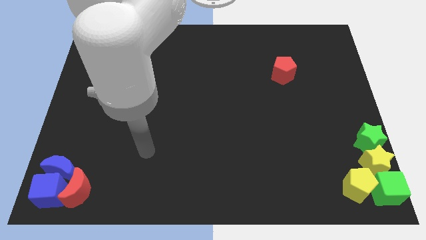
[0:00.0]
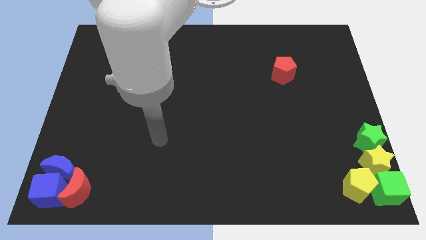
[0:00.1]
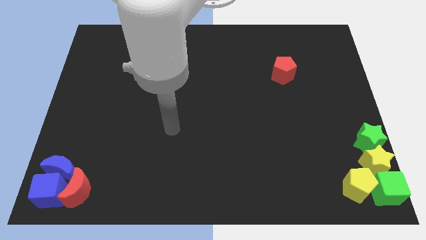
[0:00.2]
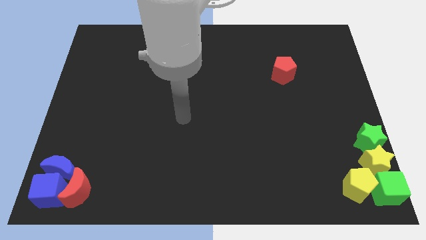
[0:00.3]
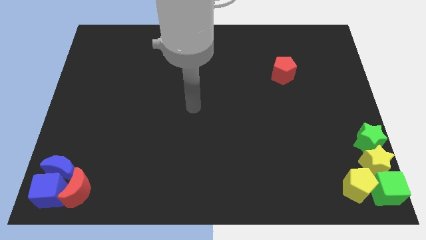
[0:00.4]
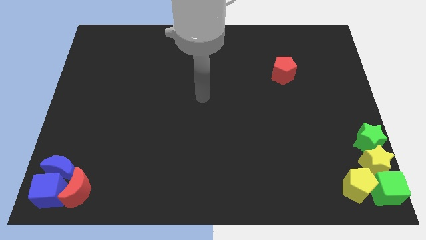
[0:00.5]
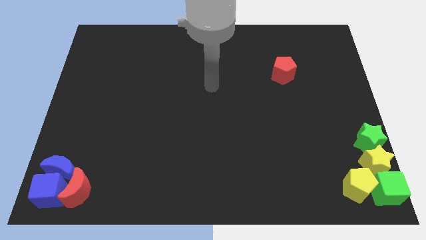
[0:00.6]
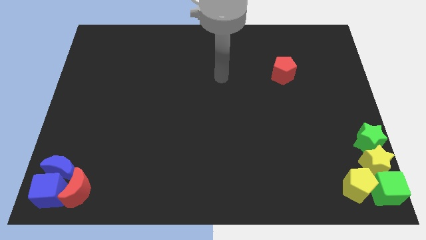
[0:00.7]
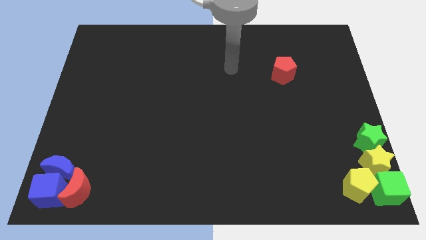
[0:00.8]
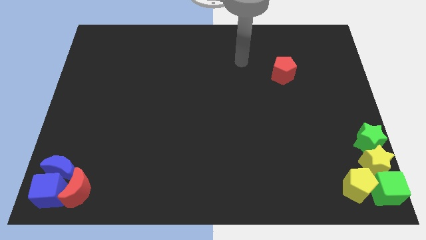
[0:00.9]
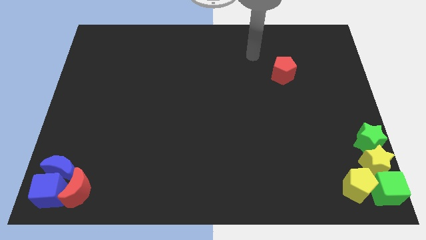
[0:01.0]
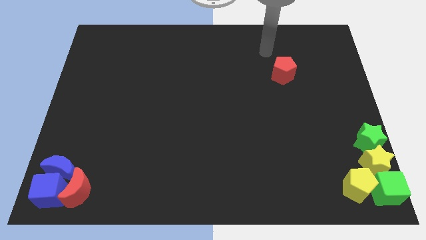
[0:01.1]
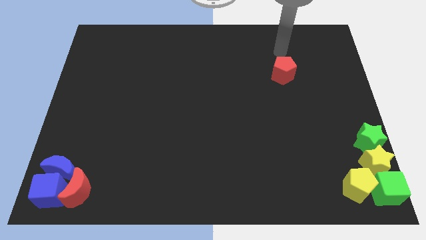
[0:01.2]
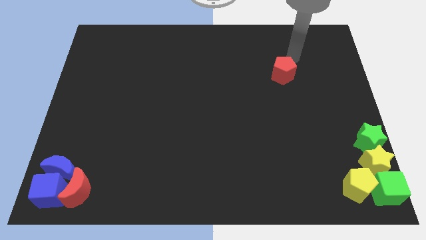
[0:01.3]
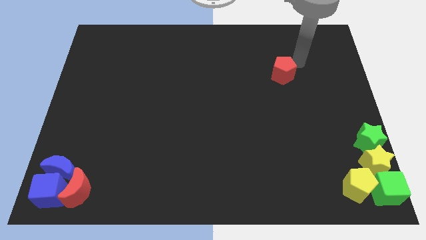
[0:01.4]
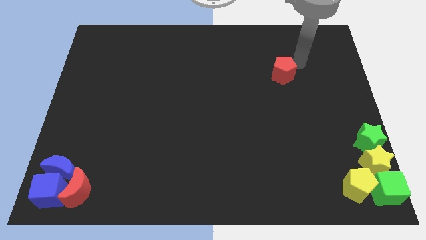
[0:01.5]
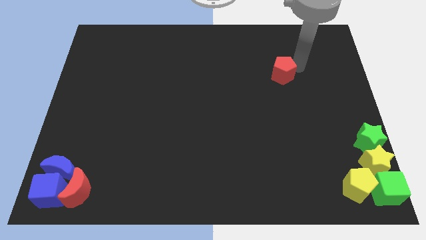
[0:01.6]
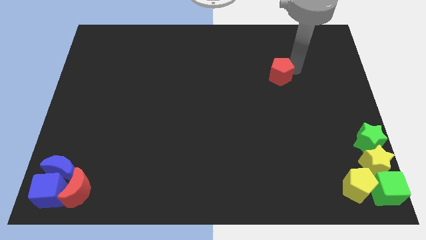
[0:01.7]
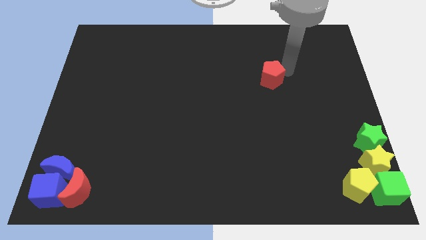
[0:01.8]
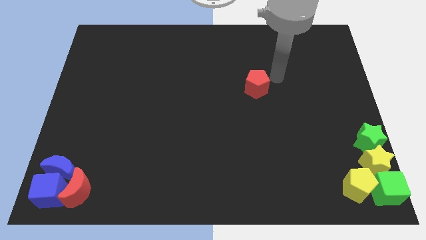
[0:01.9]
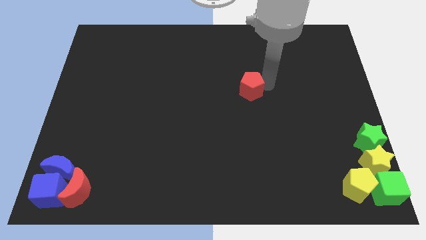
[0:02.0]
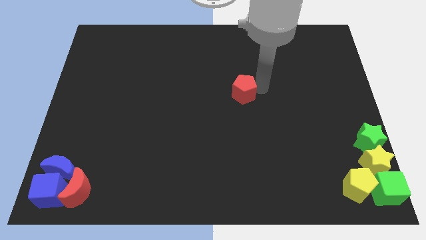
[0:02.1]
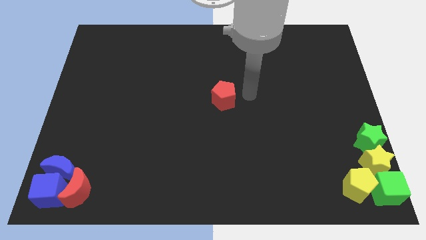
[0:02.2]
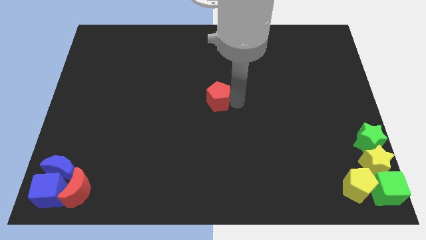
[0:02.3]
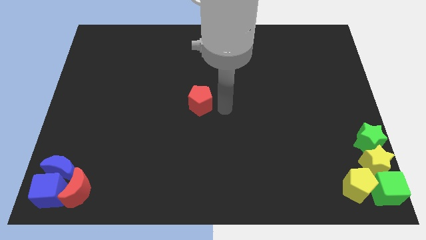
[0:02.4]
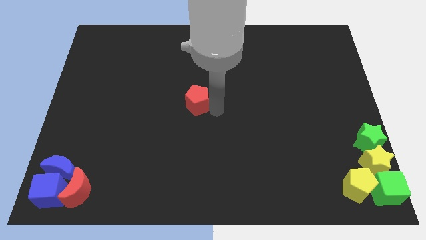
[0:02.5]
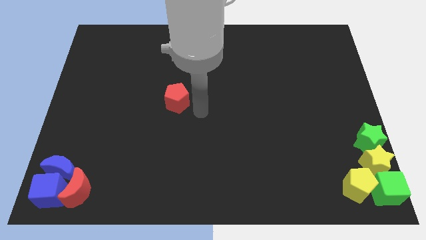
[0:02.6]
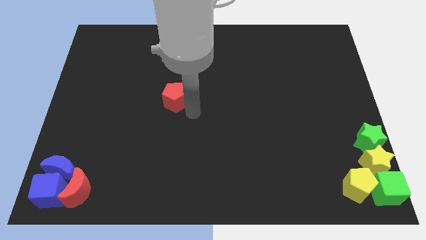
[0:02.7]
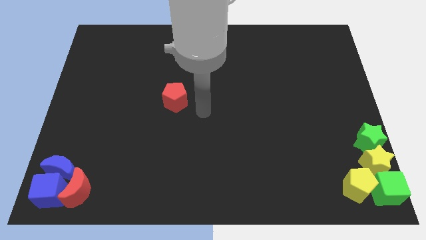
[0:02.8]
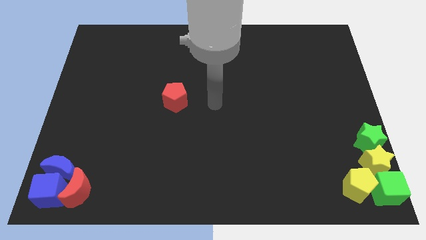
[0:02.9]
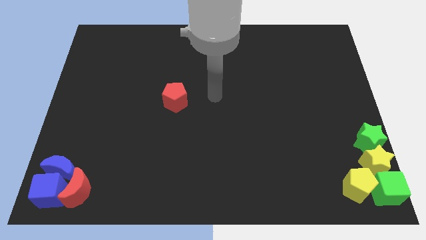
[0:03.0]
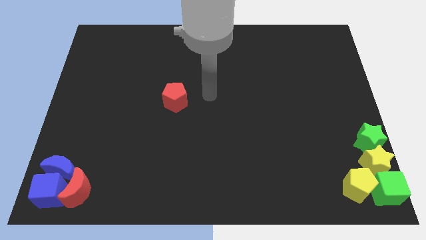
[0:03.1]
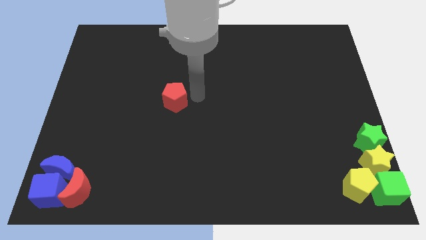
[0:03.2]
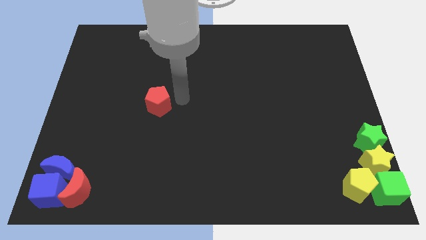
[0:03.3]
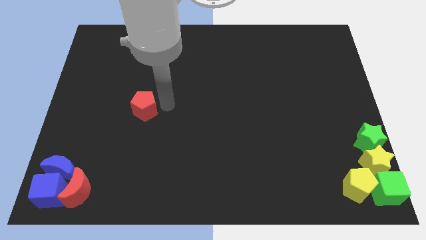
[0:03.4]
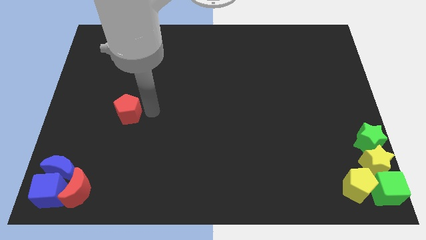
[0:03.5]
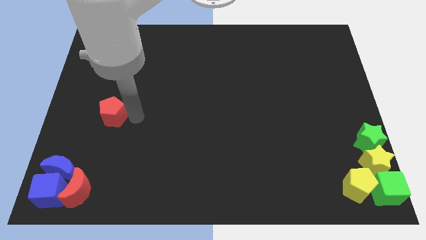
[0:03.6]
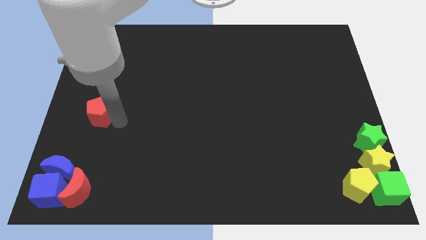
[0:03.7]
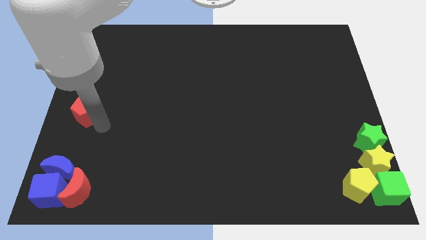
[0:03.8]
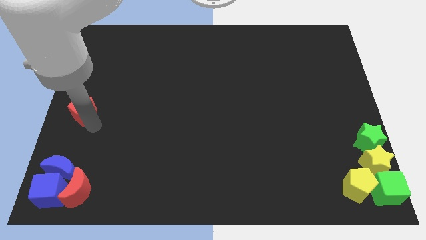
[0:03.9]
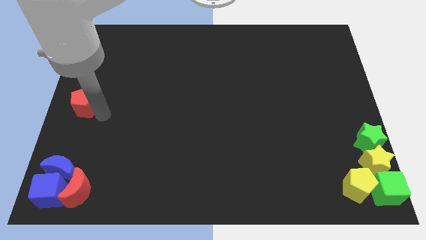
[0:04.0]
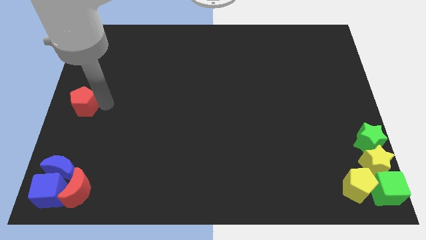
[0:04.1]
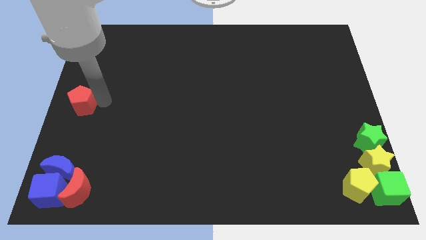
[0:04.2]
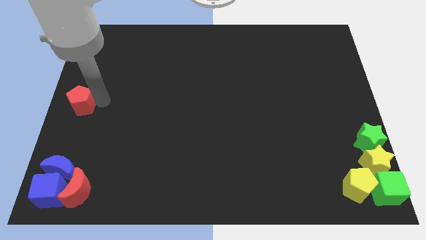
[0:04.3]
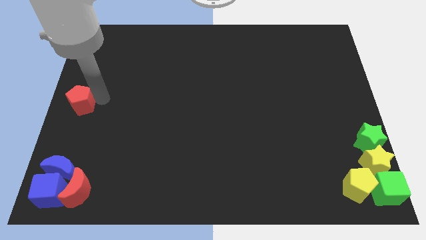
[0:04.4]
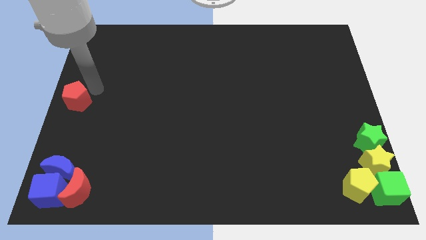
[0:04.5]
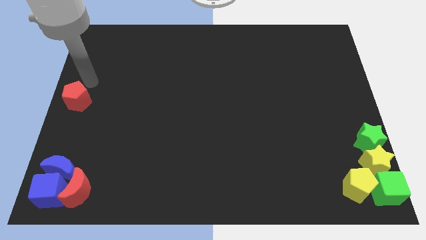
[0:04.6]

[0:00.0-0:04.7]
place the red pentagon vertically above the blue crescent

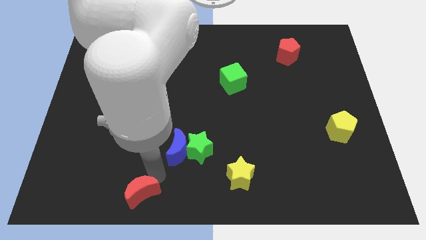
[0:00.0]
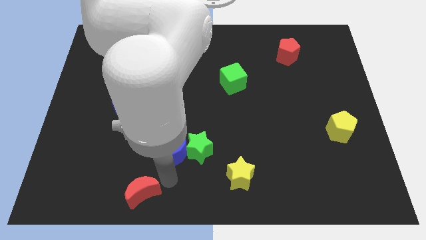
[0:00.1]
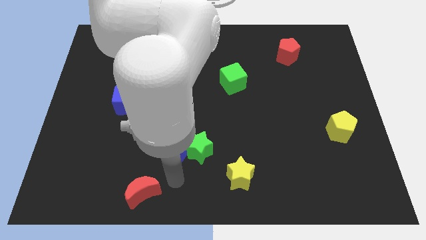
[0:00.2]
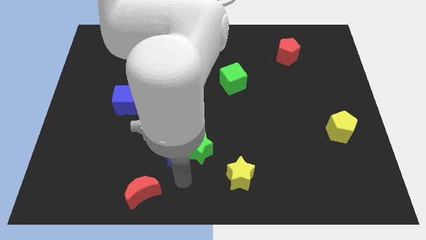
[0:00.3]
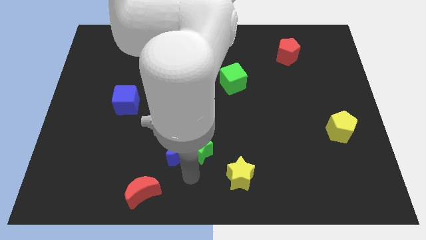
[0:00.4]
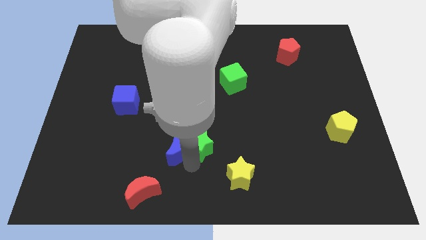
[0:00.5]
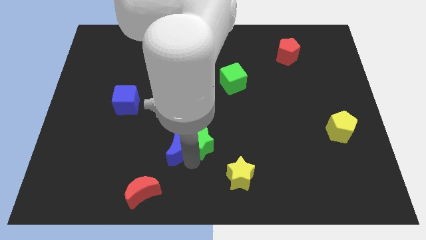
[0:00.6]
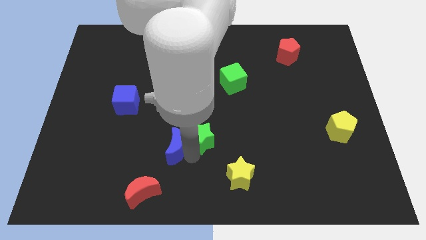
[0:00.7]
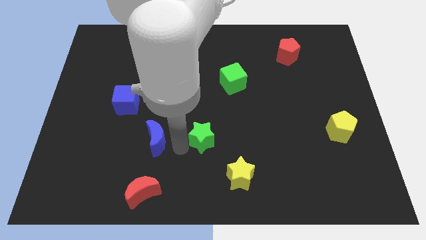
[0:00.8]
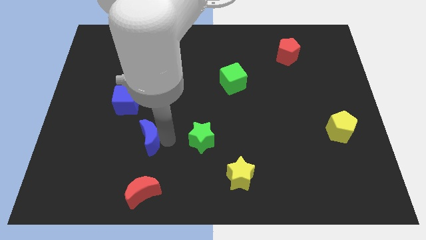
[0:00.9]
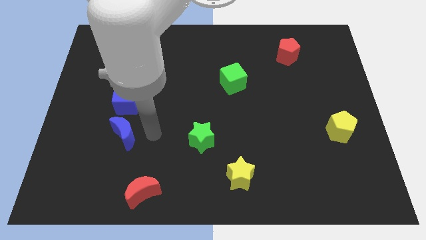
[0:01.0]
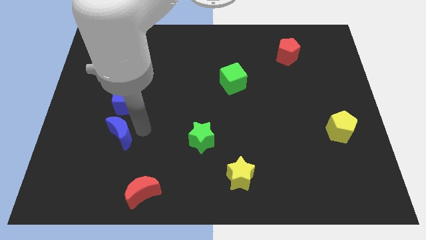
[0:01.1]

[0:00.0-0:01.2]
separate blue moon from green star

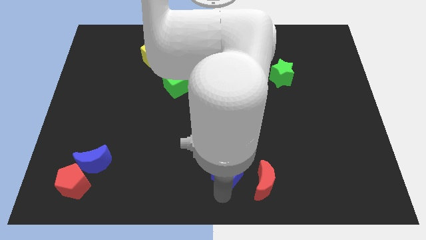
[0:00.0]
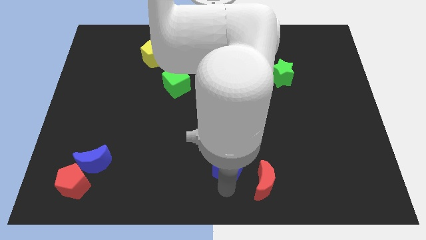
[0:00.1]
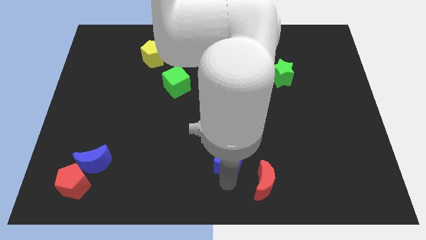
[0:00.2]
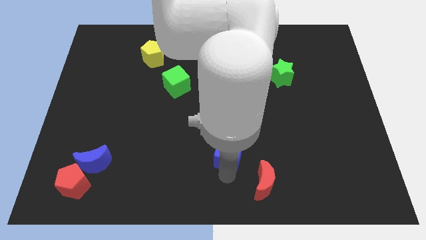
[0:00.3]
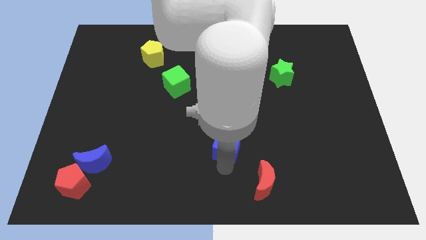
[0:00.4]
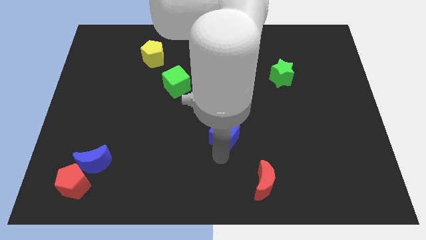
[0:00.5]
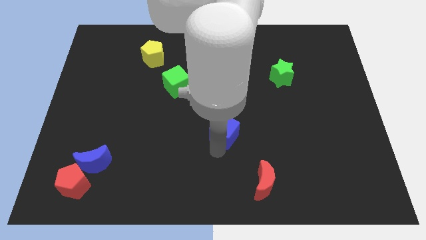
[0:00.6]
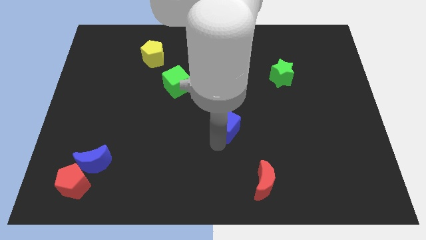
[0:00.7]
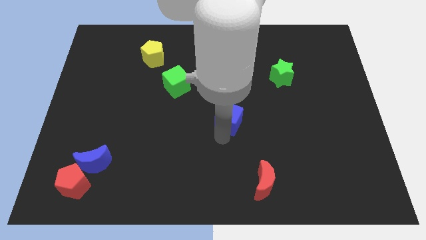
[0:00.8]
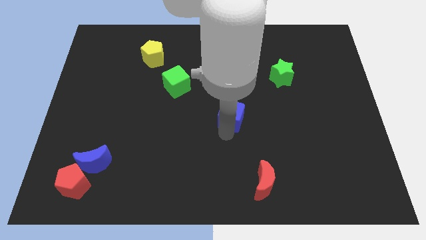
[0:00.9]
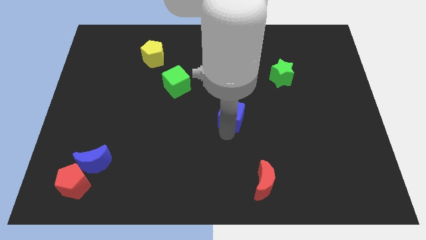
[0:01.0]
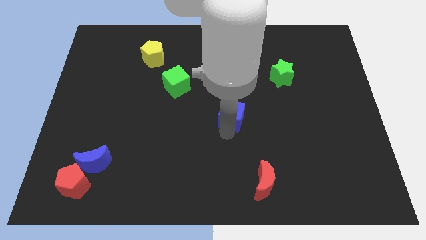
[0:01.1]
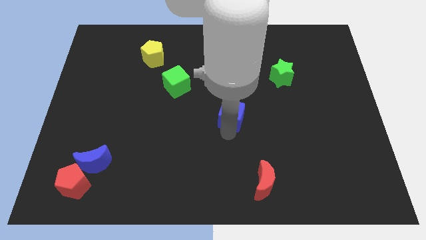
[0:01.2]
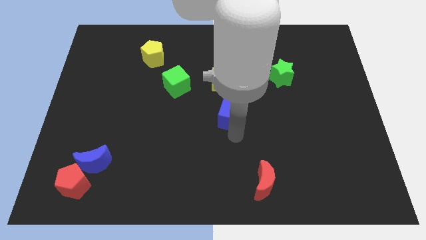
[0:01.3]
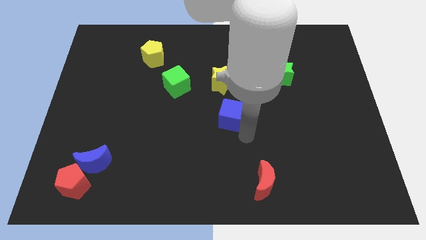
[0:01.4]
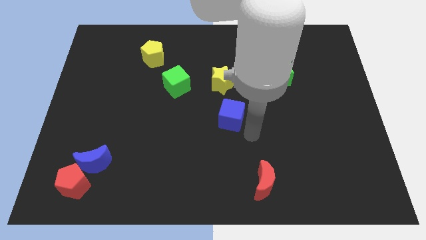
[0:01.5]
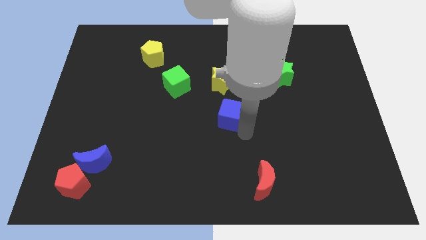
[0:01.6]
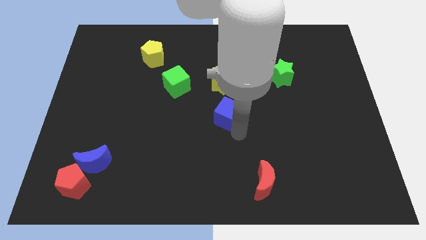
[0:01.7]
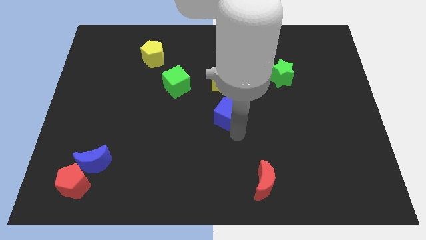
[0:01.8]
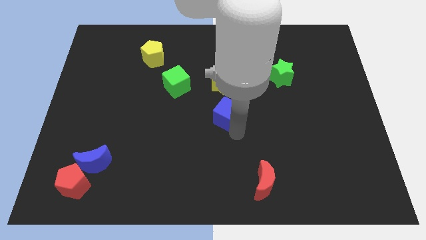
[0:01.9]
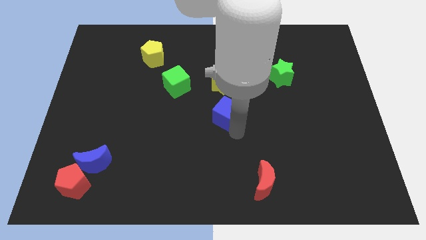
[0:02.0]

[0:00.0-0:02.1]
slide the blue cube towards the center of the board

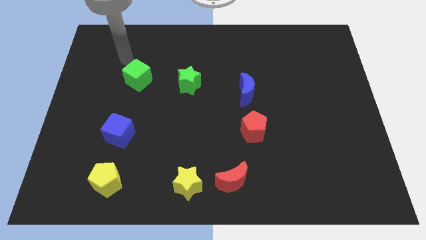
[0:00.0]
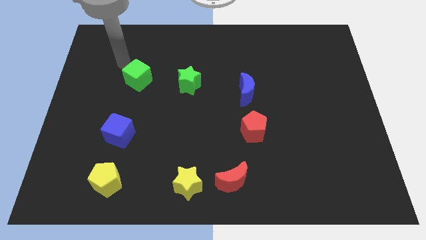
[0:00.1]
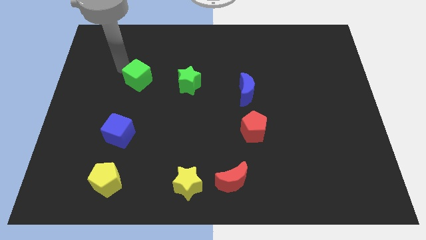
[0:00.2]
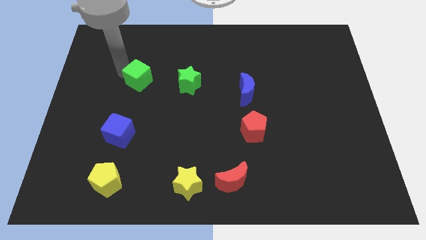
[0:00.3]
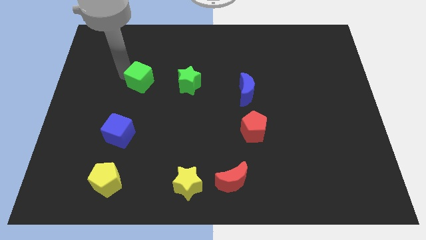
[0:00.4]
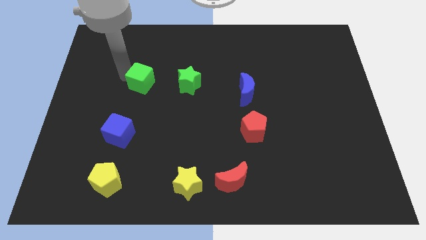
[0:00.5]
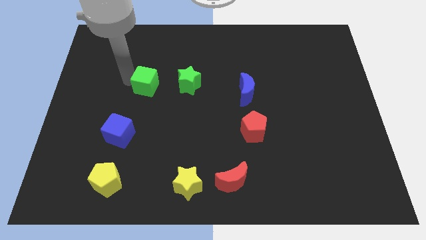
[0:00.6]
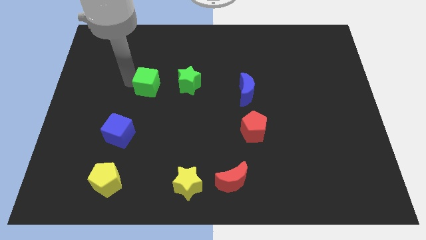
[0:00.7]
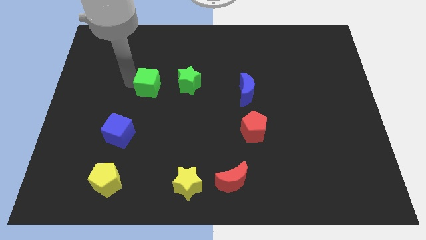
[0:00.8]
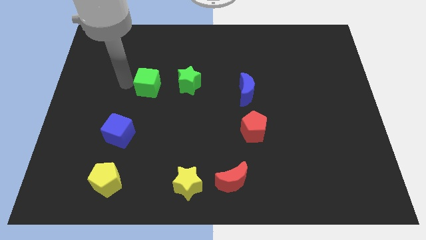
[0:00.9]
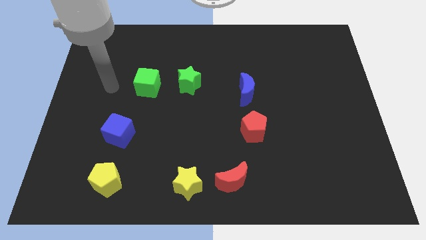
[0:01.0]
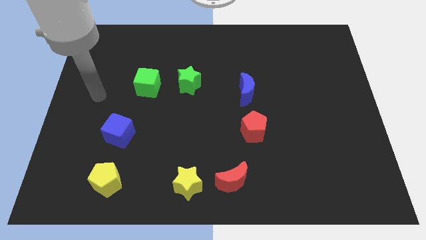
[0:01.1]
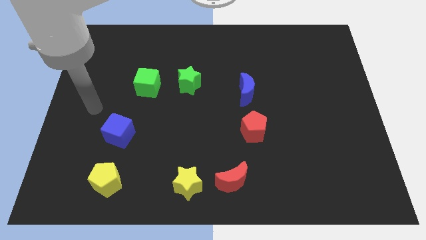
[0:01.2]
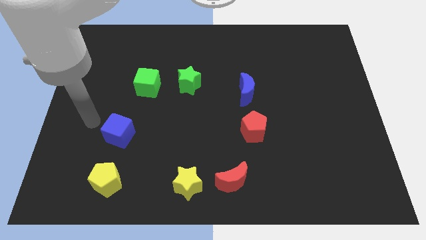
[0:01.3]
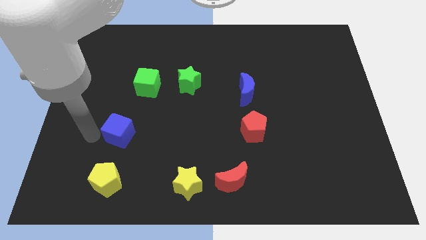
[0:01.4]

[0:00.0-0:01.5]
slightly move the green cube parallel to green star
